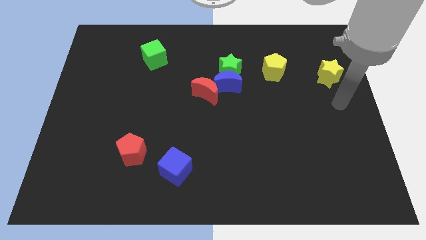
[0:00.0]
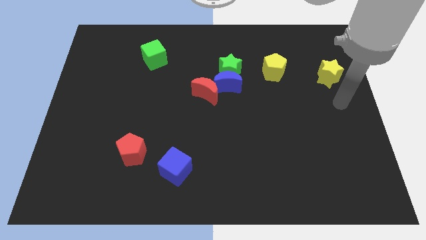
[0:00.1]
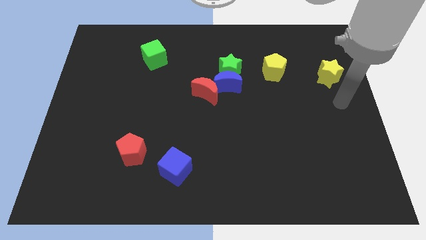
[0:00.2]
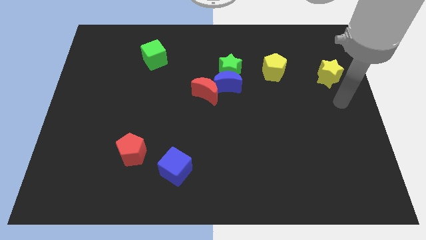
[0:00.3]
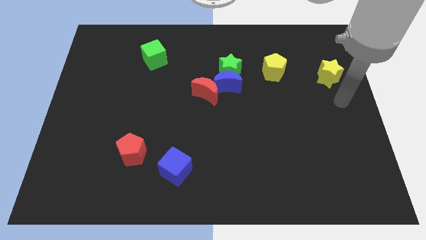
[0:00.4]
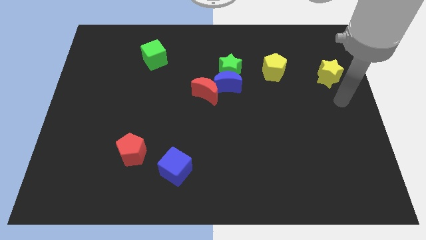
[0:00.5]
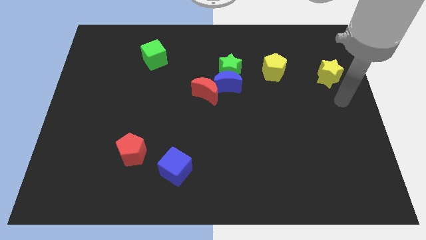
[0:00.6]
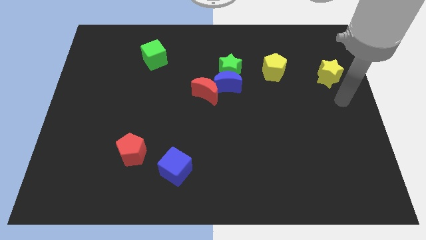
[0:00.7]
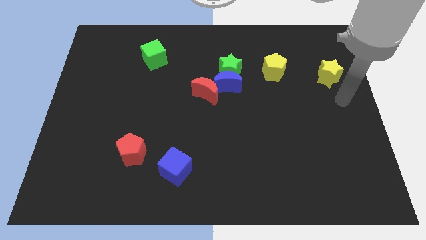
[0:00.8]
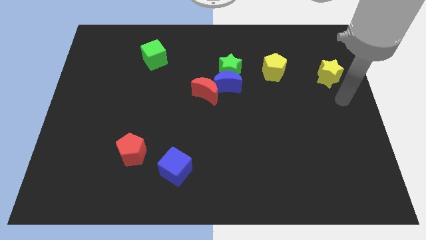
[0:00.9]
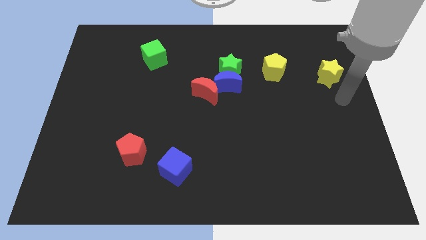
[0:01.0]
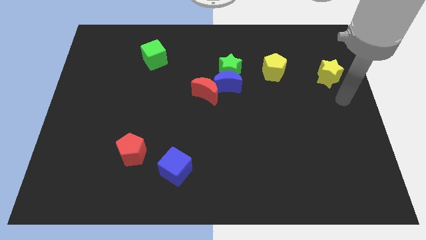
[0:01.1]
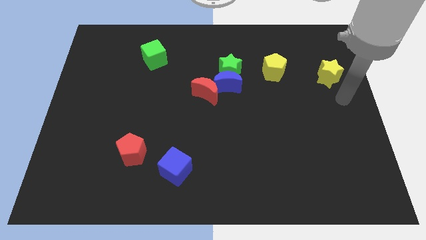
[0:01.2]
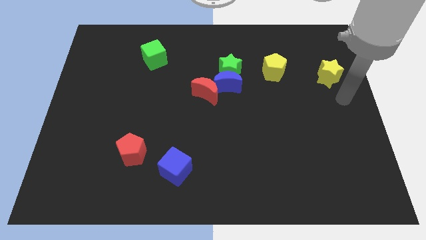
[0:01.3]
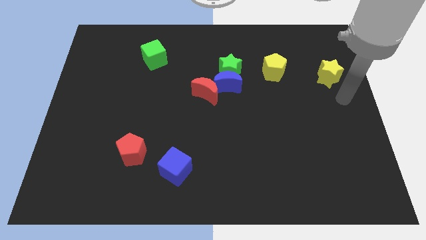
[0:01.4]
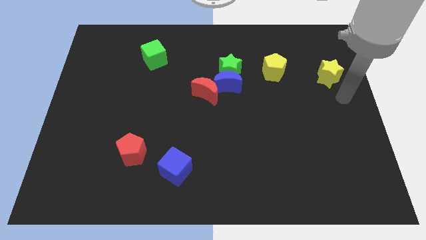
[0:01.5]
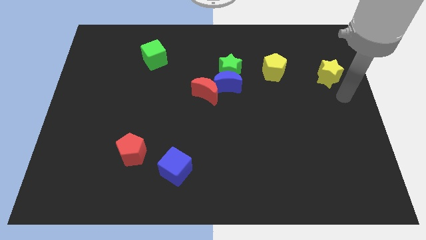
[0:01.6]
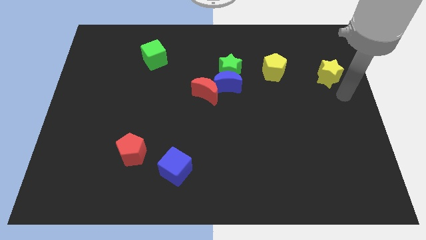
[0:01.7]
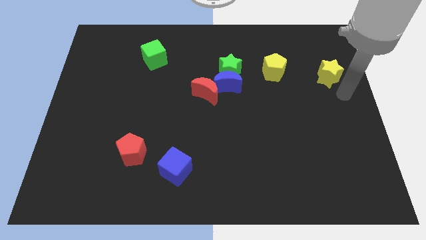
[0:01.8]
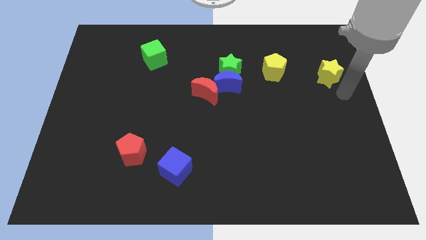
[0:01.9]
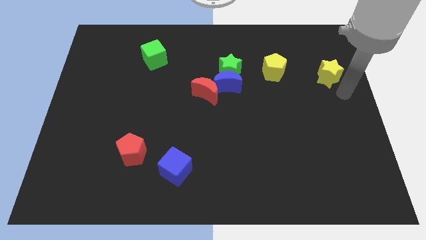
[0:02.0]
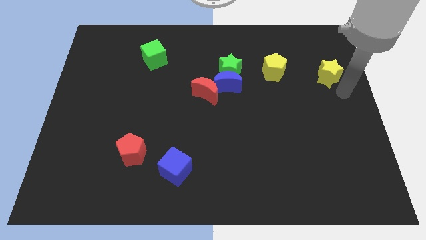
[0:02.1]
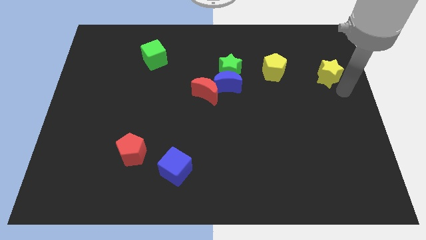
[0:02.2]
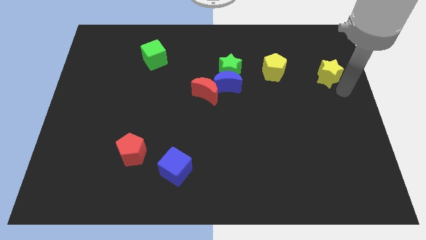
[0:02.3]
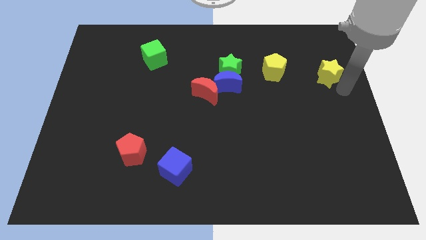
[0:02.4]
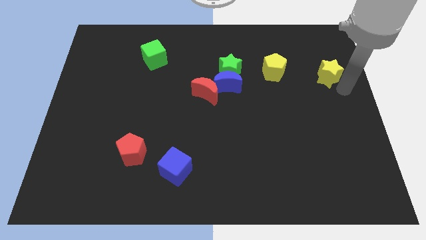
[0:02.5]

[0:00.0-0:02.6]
move your arm to the right side of the yellow star

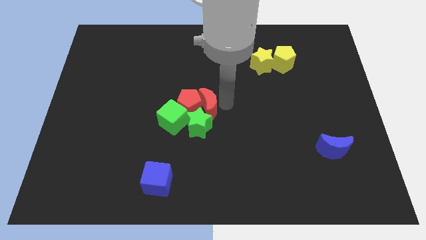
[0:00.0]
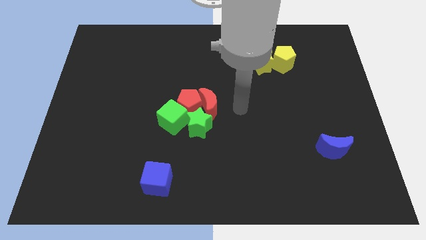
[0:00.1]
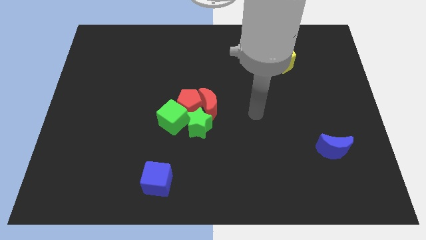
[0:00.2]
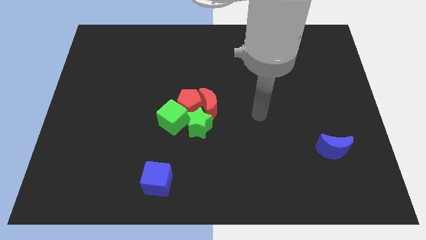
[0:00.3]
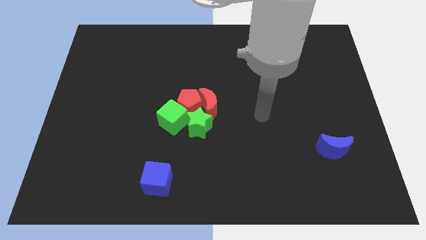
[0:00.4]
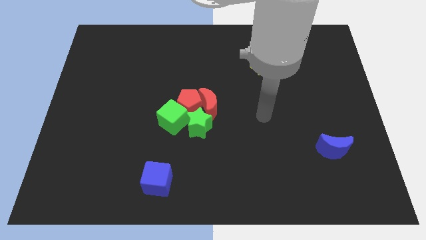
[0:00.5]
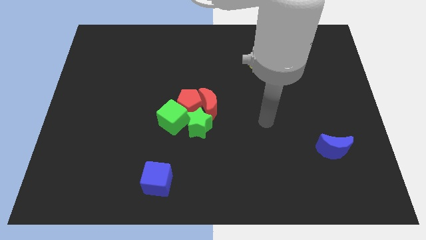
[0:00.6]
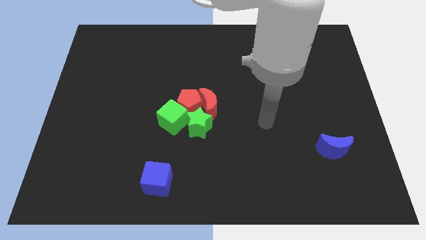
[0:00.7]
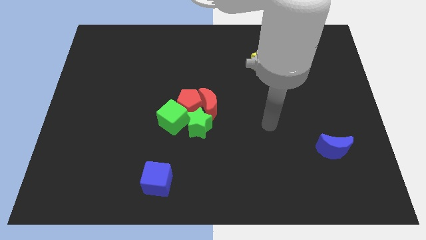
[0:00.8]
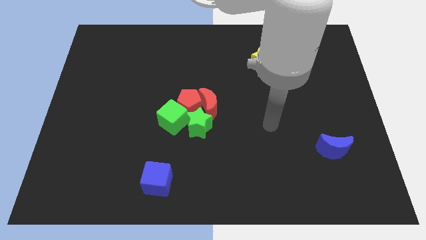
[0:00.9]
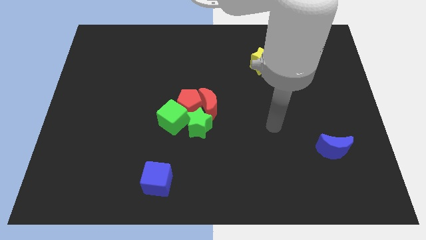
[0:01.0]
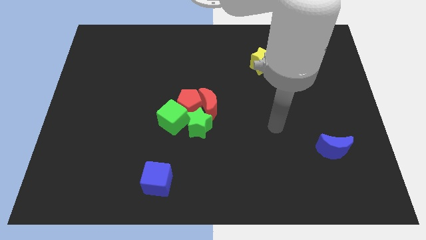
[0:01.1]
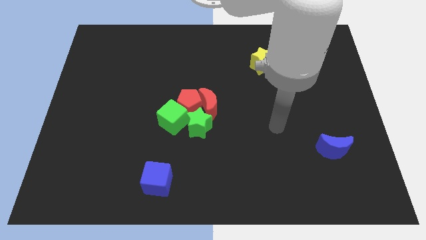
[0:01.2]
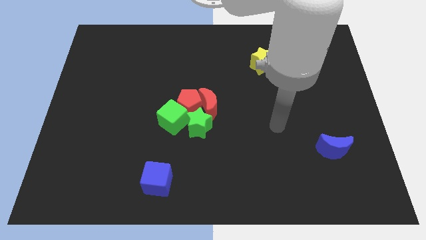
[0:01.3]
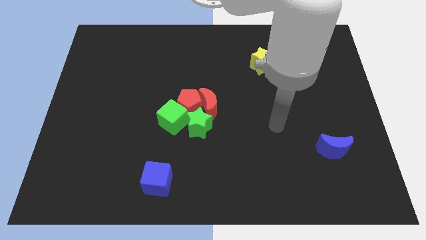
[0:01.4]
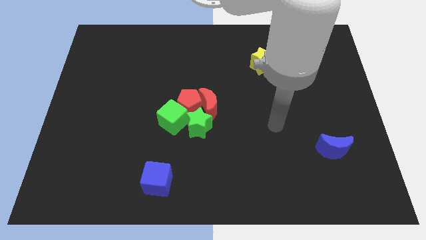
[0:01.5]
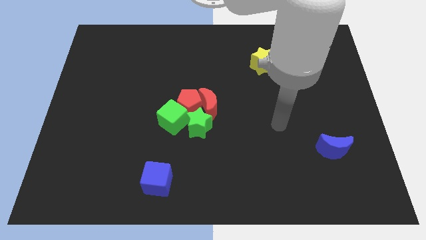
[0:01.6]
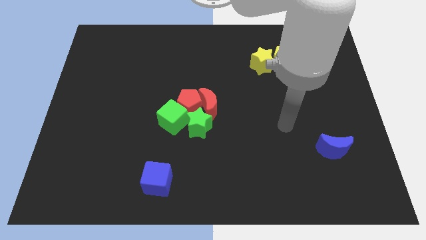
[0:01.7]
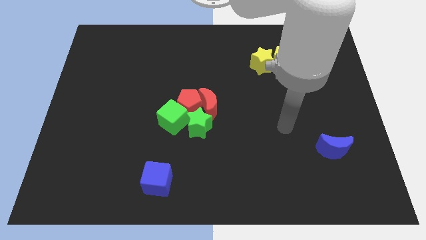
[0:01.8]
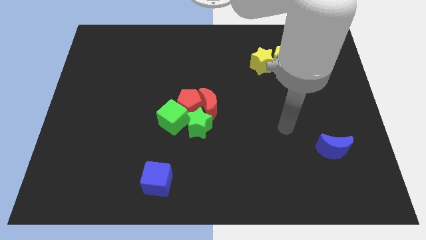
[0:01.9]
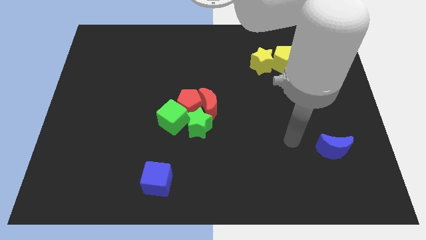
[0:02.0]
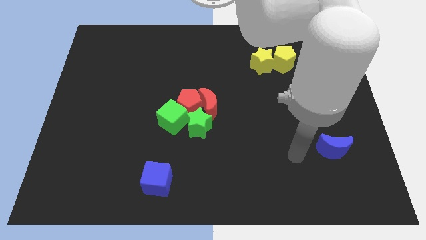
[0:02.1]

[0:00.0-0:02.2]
point your arm at the left of the blue cube

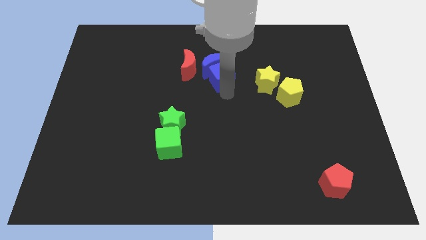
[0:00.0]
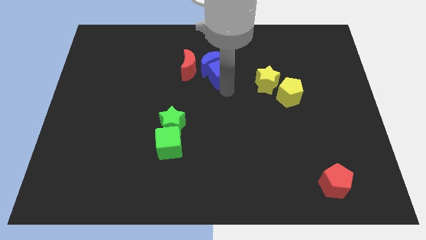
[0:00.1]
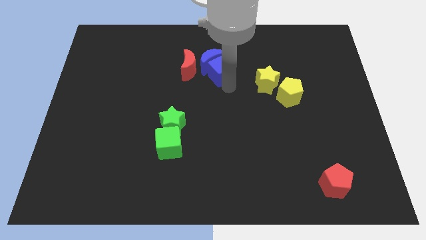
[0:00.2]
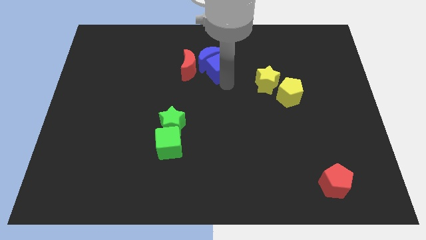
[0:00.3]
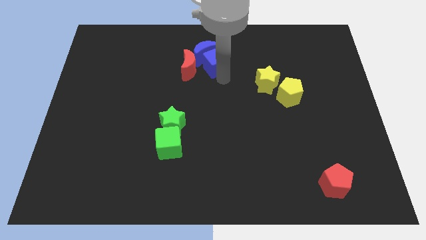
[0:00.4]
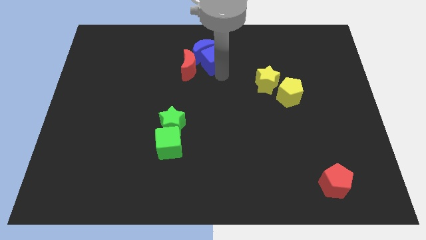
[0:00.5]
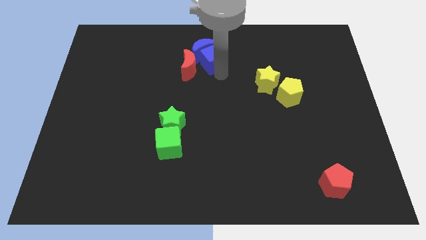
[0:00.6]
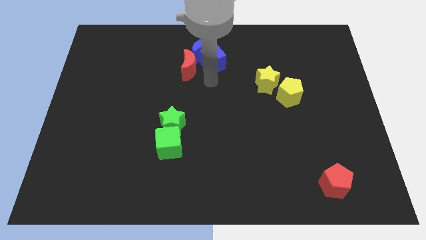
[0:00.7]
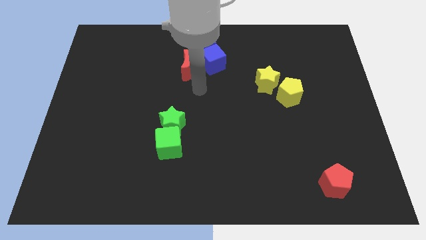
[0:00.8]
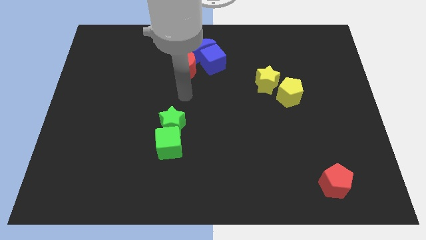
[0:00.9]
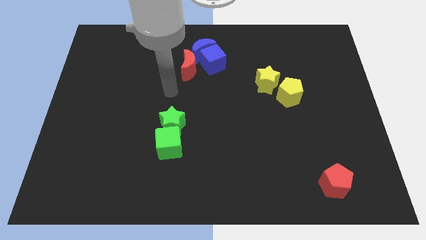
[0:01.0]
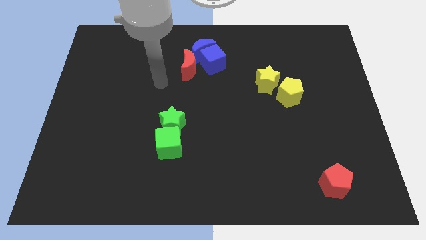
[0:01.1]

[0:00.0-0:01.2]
place blue blocks to the right of the red crescent

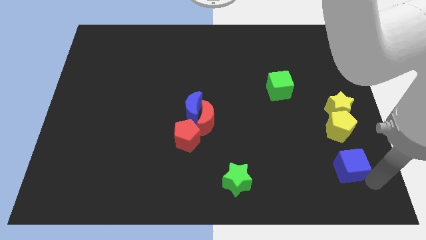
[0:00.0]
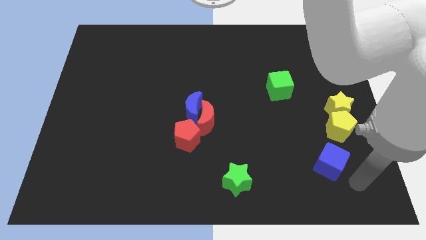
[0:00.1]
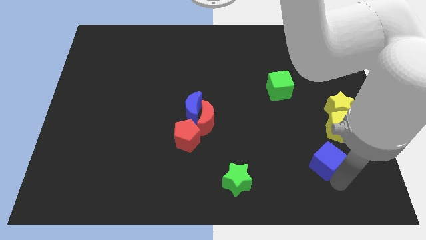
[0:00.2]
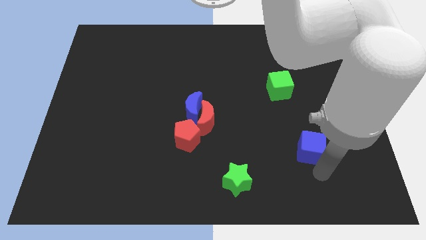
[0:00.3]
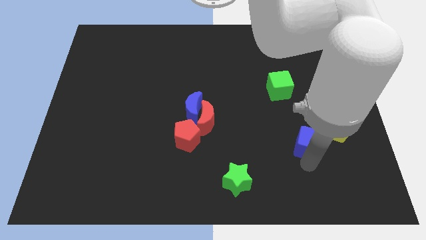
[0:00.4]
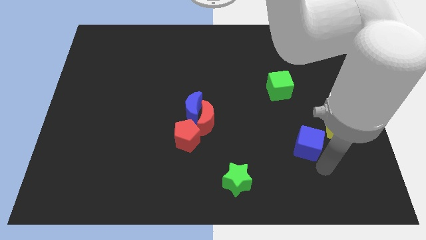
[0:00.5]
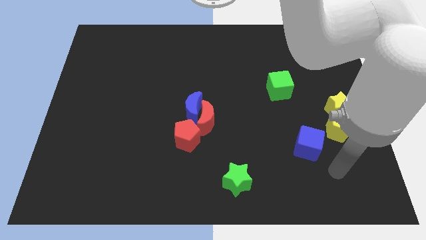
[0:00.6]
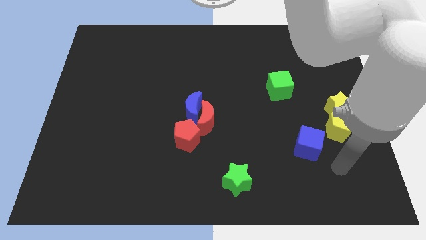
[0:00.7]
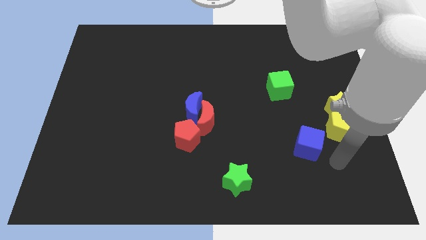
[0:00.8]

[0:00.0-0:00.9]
push the blue cube towards the bottom left of the yellow pentagon

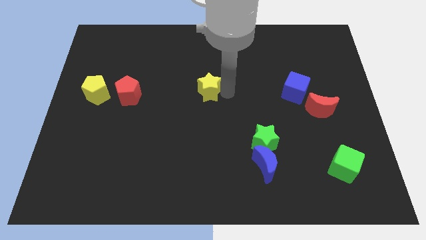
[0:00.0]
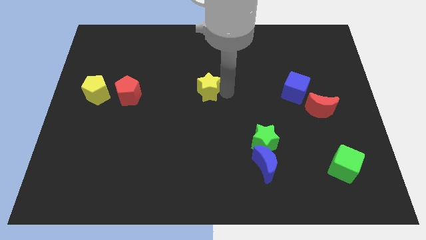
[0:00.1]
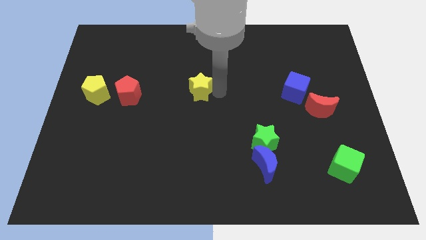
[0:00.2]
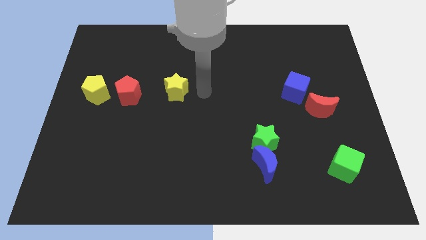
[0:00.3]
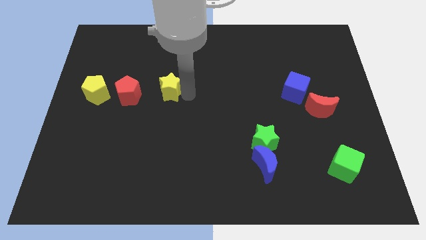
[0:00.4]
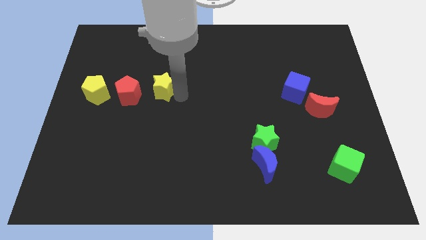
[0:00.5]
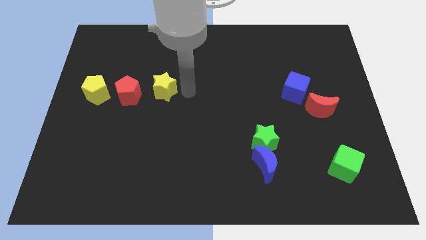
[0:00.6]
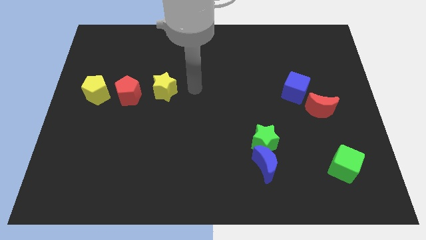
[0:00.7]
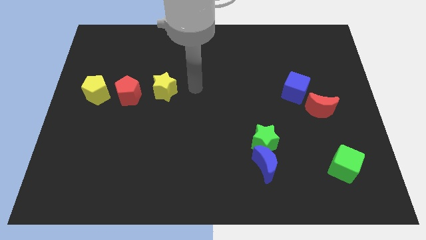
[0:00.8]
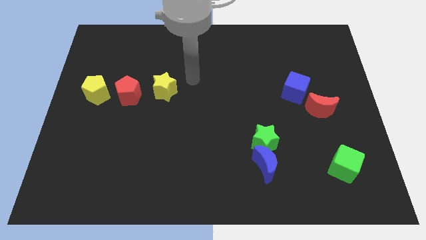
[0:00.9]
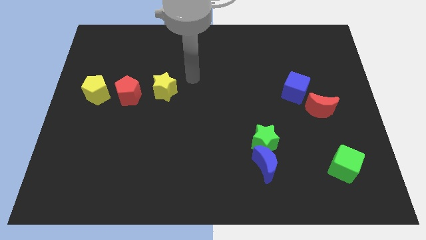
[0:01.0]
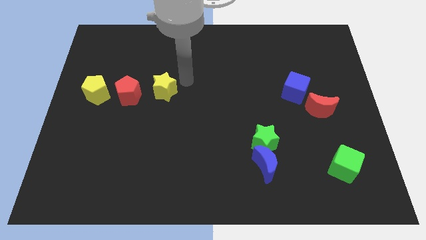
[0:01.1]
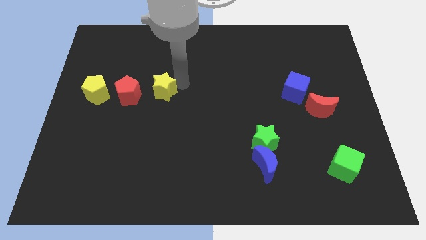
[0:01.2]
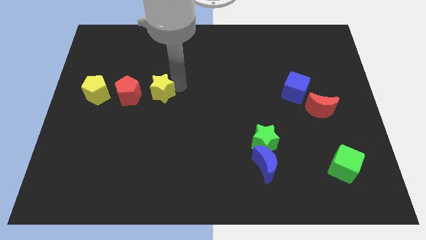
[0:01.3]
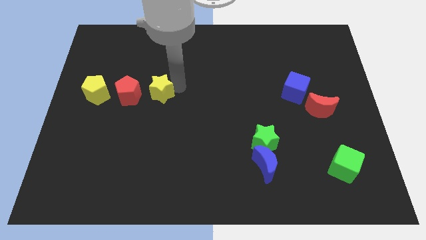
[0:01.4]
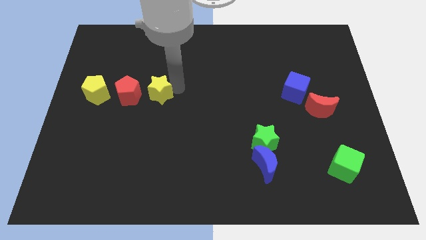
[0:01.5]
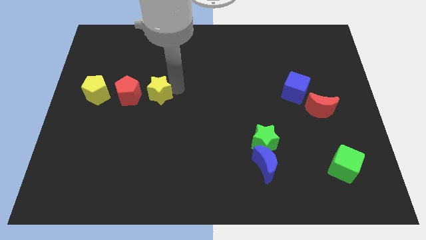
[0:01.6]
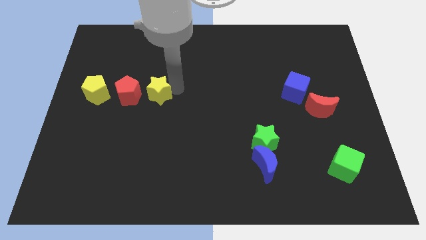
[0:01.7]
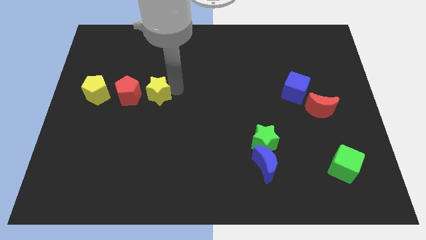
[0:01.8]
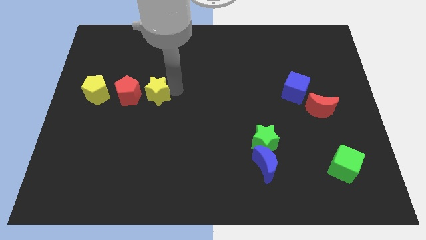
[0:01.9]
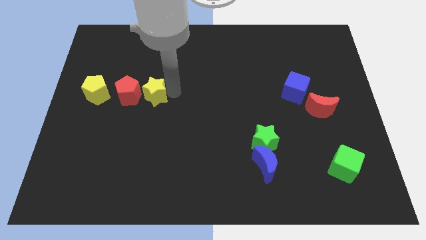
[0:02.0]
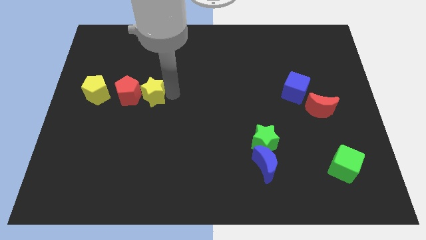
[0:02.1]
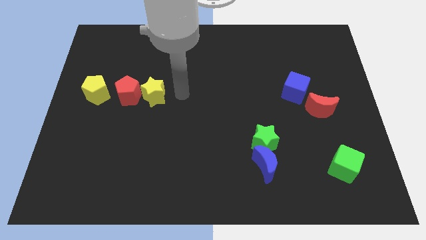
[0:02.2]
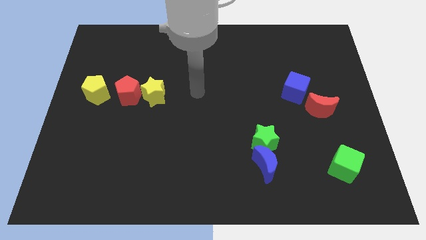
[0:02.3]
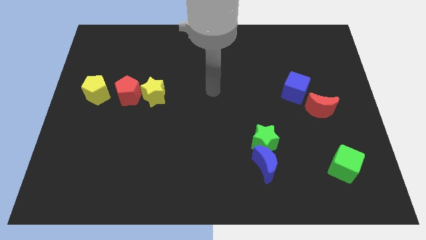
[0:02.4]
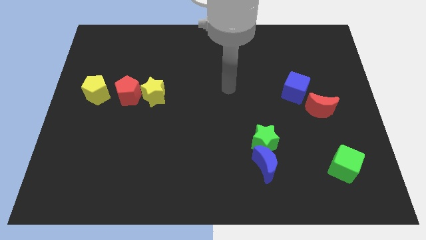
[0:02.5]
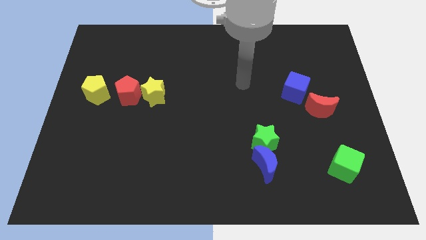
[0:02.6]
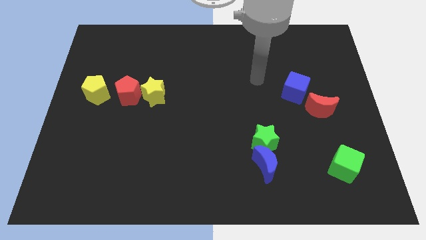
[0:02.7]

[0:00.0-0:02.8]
adjust the yellow star to the right side of the red pentagon
